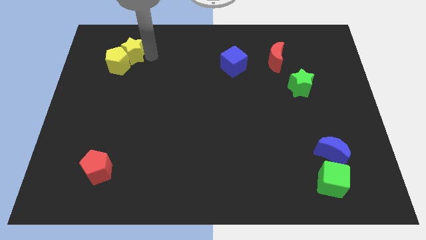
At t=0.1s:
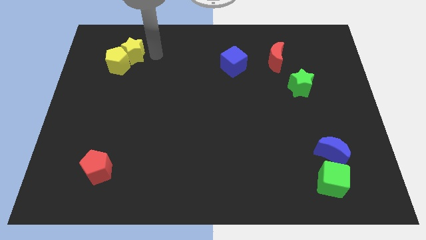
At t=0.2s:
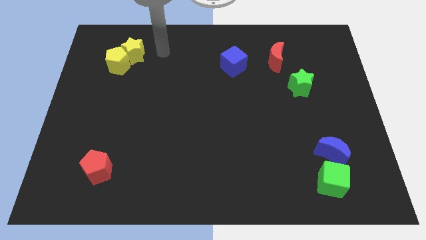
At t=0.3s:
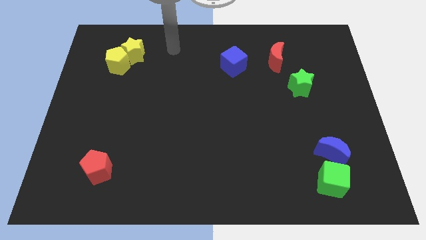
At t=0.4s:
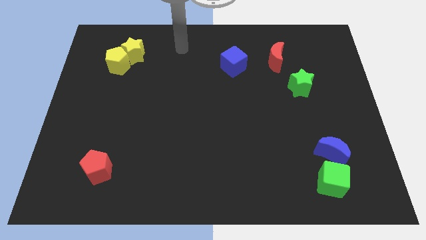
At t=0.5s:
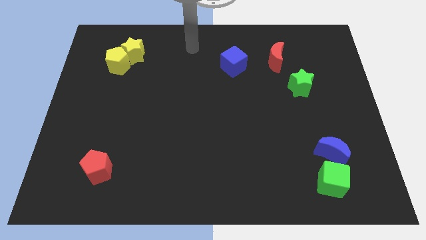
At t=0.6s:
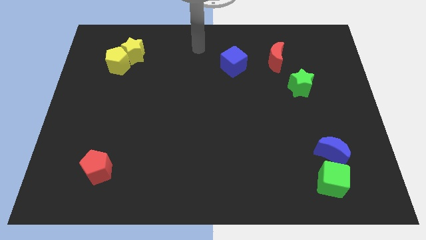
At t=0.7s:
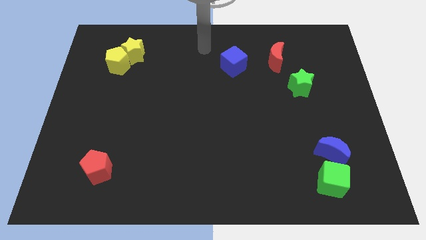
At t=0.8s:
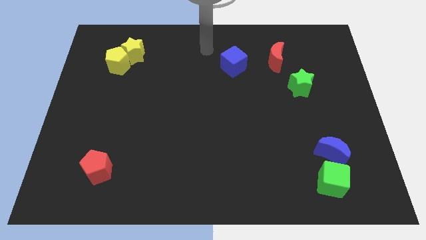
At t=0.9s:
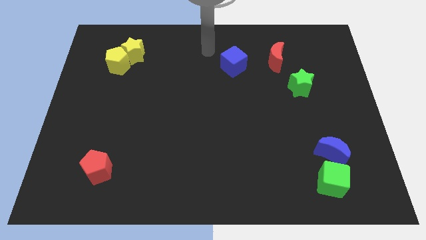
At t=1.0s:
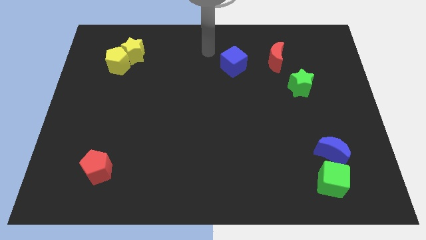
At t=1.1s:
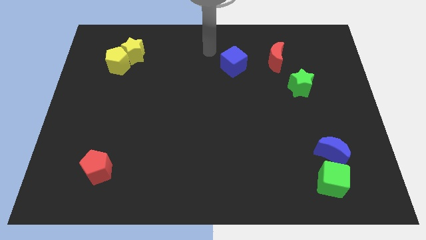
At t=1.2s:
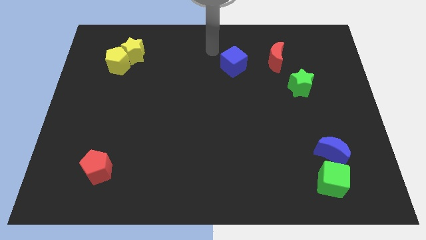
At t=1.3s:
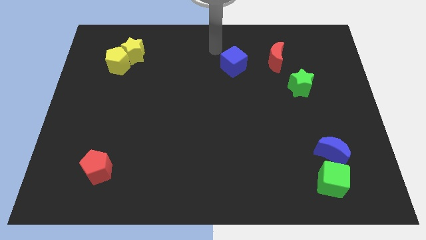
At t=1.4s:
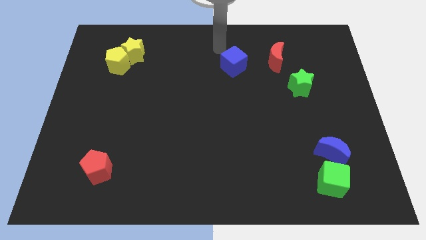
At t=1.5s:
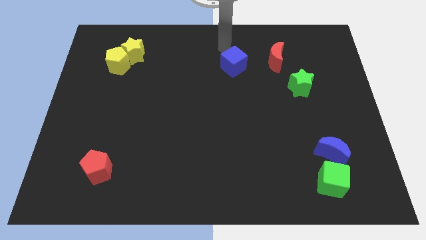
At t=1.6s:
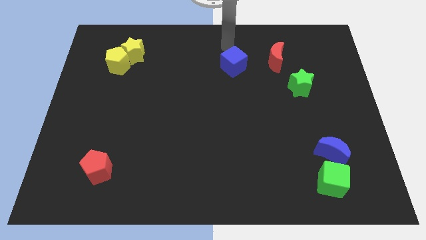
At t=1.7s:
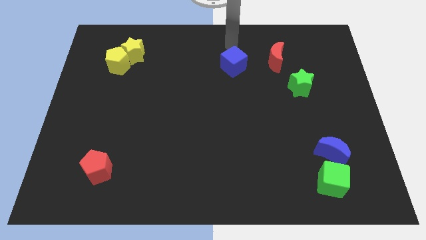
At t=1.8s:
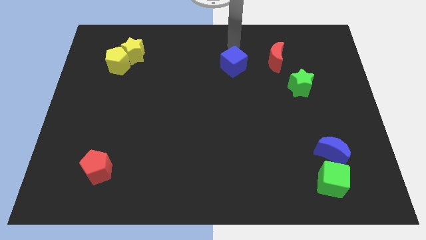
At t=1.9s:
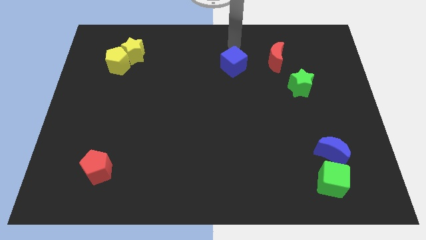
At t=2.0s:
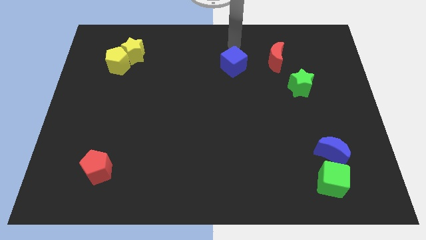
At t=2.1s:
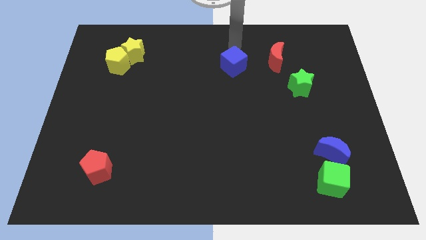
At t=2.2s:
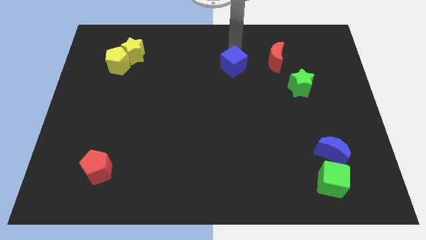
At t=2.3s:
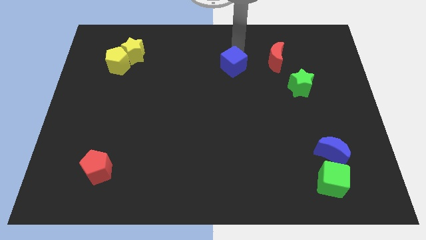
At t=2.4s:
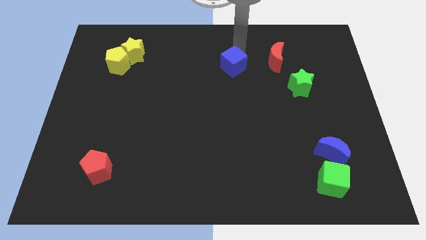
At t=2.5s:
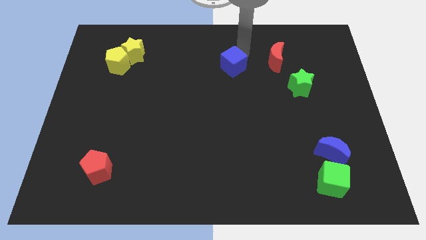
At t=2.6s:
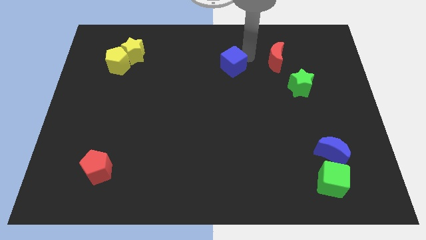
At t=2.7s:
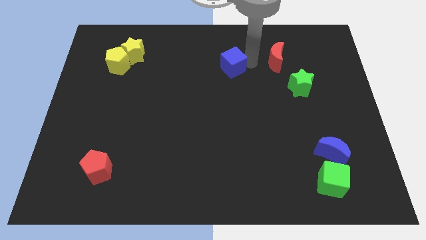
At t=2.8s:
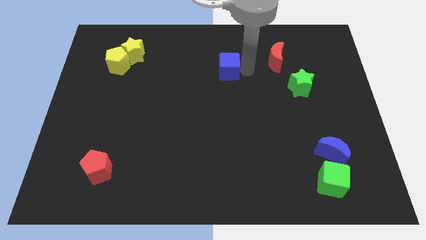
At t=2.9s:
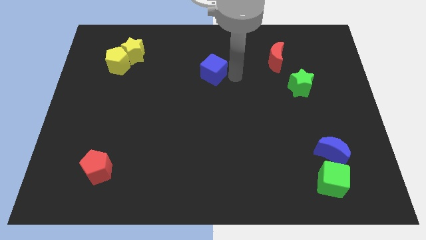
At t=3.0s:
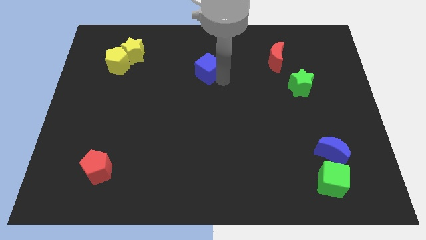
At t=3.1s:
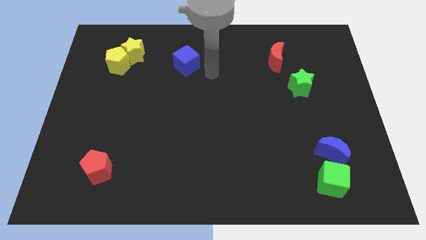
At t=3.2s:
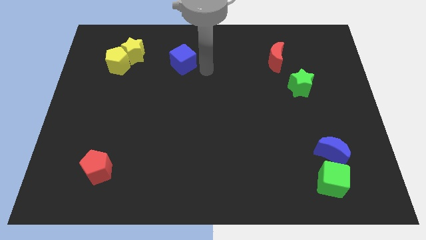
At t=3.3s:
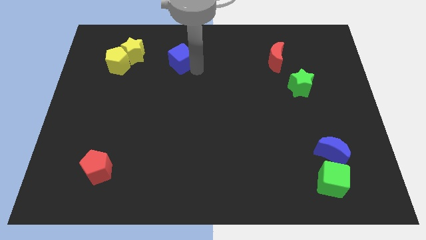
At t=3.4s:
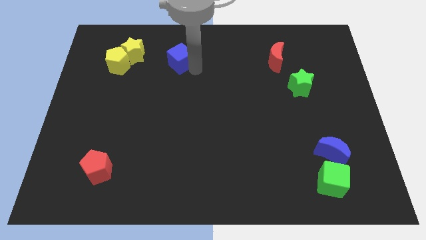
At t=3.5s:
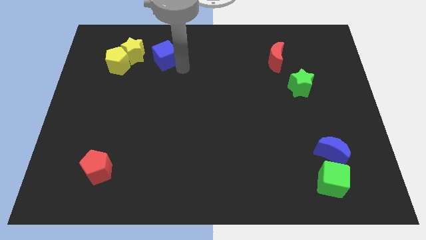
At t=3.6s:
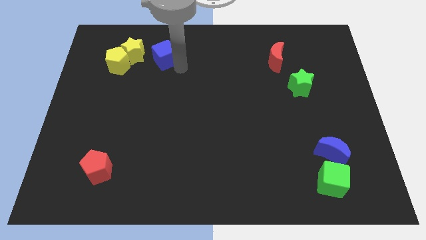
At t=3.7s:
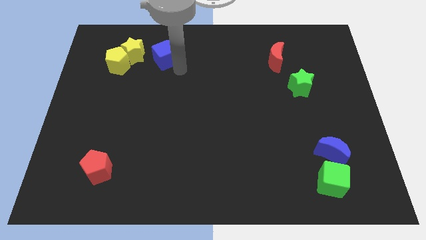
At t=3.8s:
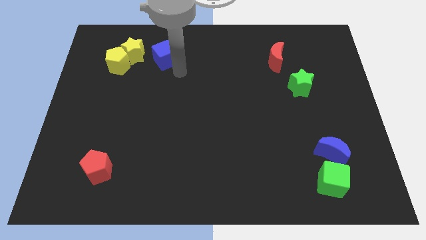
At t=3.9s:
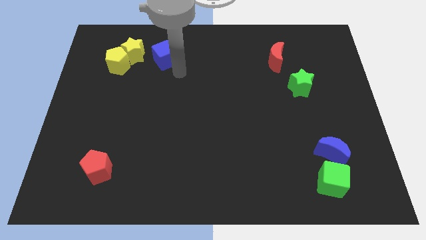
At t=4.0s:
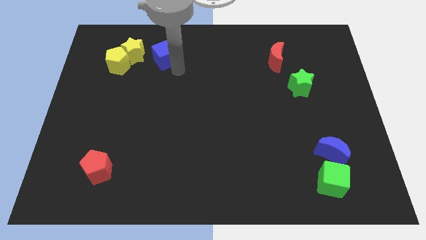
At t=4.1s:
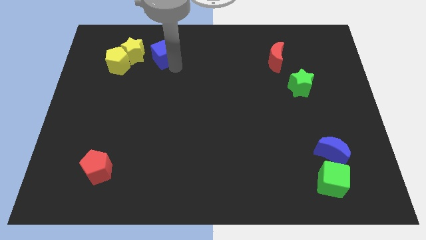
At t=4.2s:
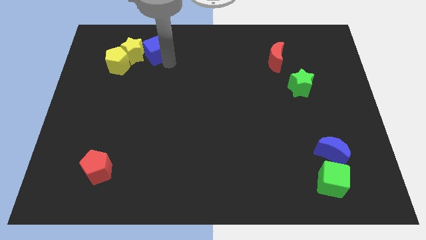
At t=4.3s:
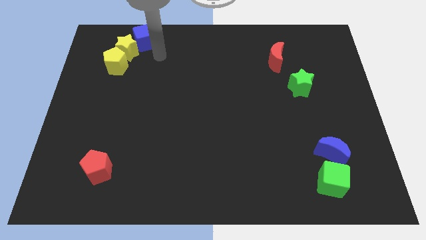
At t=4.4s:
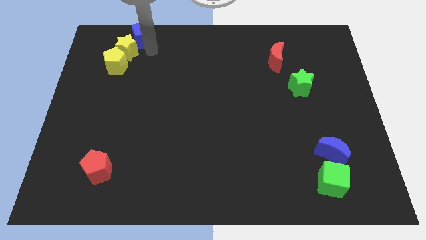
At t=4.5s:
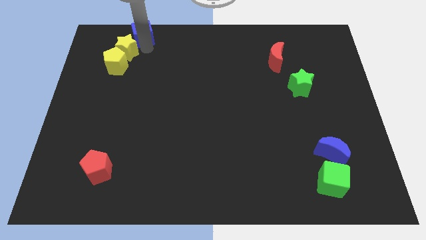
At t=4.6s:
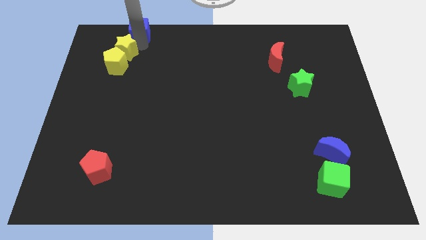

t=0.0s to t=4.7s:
move the blue cube towards the top side of the yellow star

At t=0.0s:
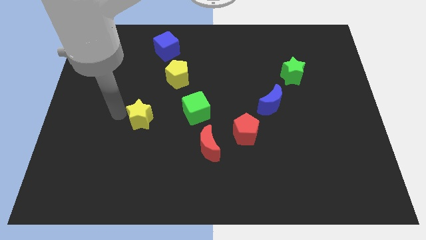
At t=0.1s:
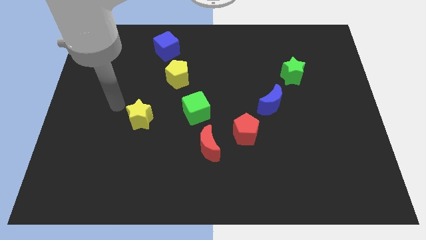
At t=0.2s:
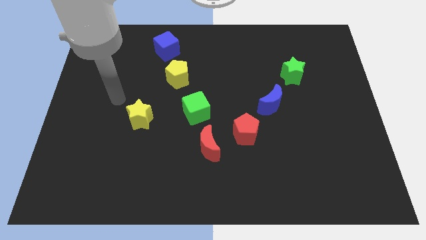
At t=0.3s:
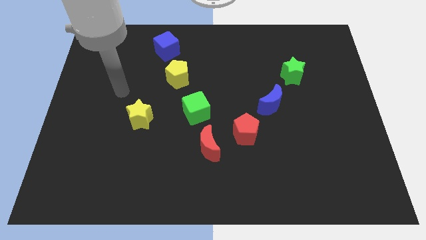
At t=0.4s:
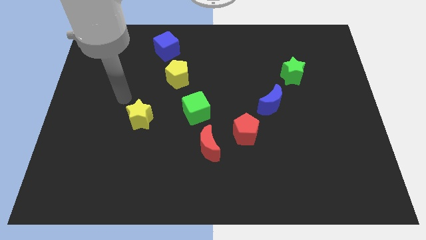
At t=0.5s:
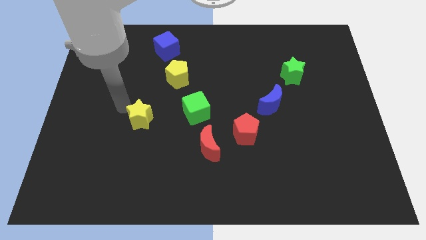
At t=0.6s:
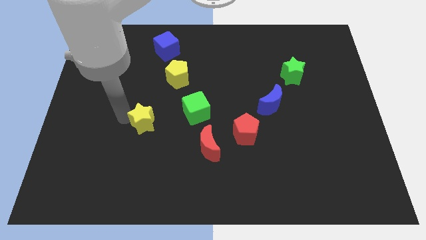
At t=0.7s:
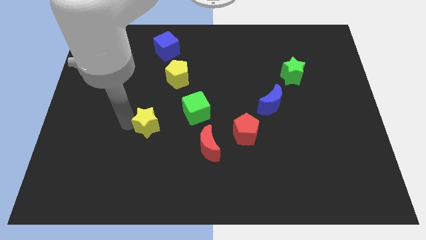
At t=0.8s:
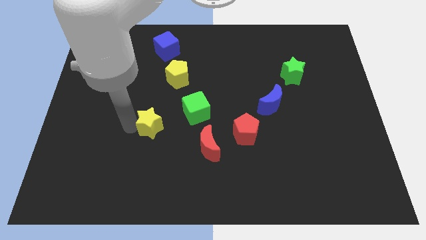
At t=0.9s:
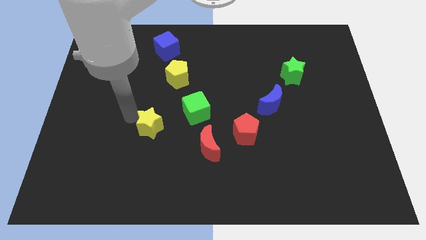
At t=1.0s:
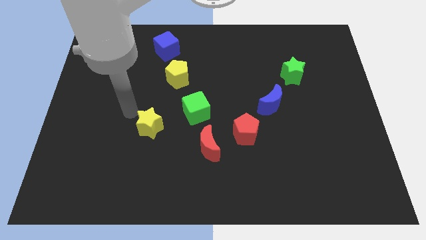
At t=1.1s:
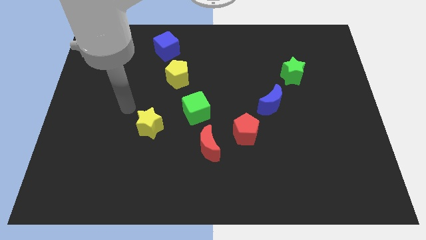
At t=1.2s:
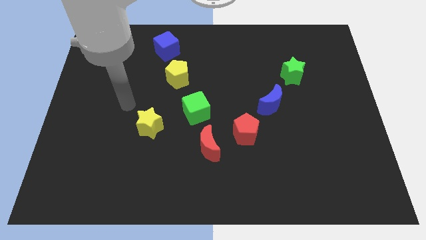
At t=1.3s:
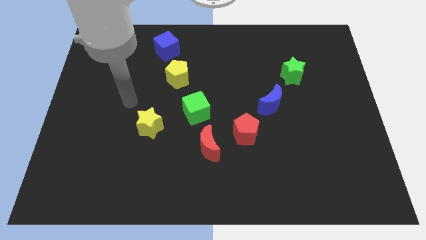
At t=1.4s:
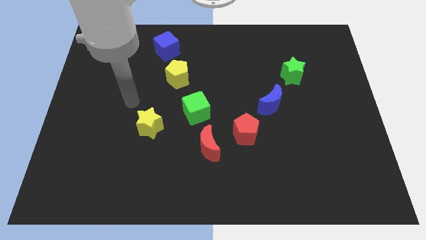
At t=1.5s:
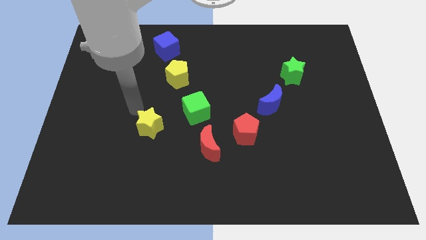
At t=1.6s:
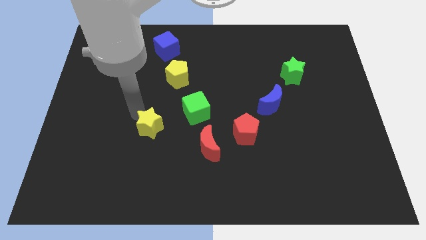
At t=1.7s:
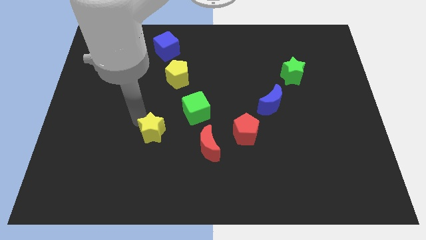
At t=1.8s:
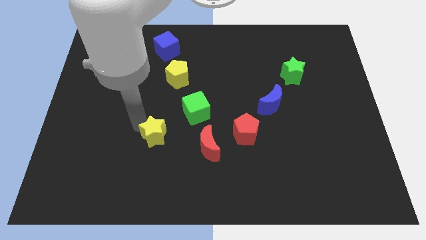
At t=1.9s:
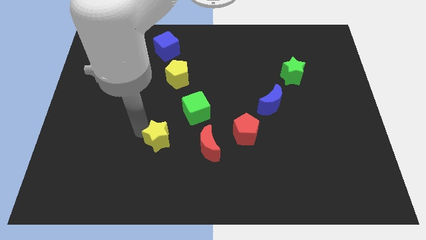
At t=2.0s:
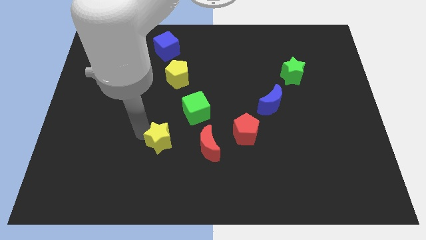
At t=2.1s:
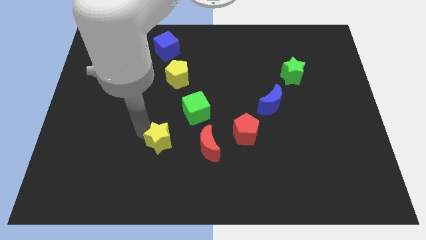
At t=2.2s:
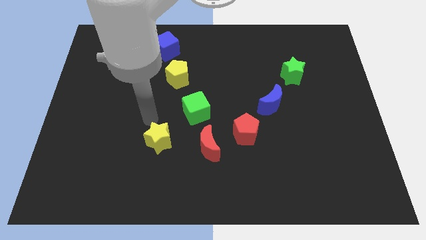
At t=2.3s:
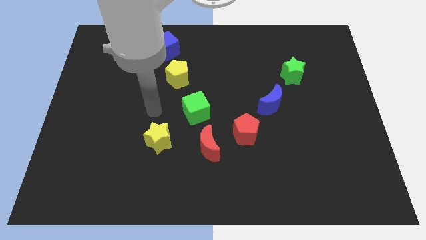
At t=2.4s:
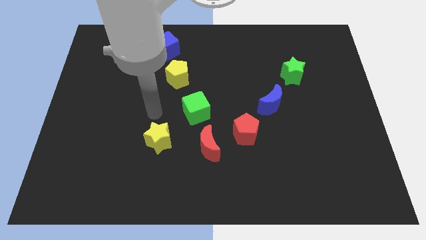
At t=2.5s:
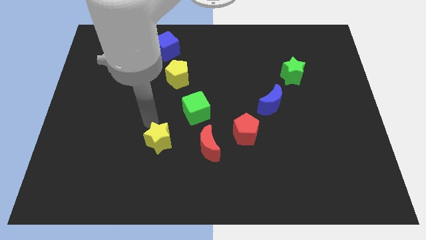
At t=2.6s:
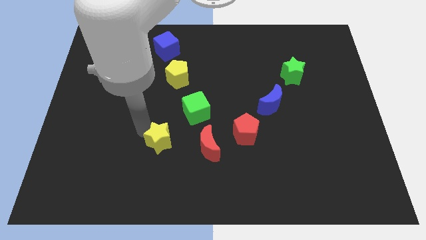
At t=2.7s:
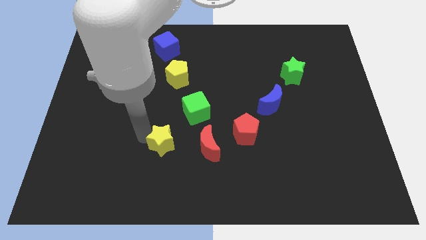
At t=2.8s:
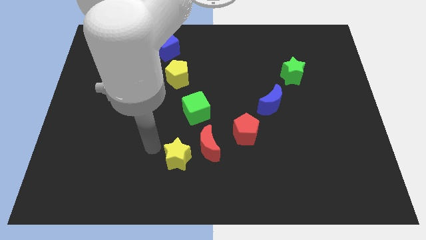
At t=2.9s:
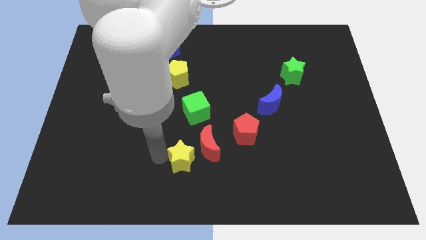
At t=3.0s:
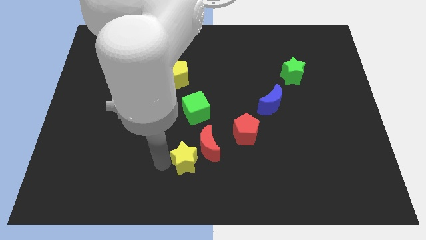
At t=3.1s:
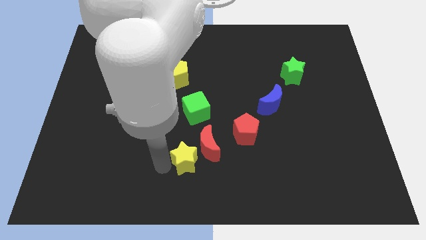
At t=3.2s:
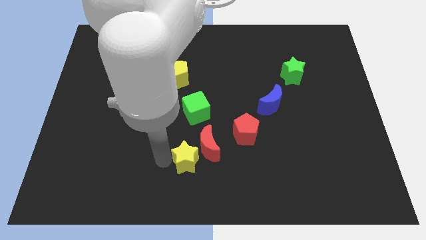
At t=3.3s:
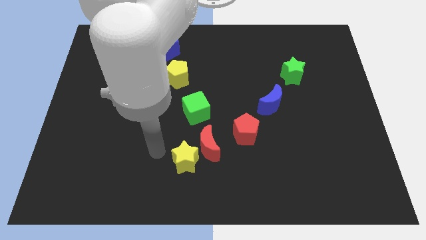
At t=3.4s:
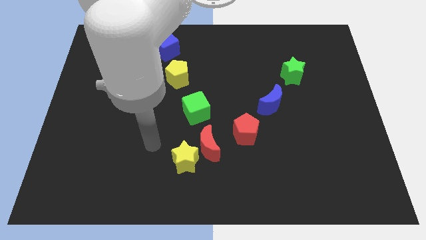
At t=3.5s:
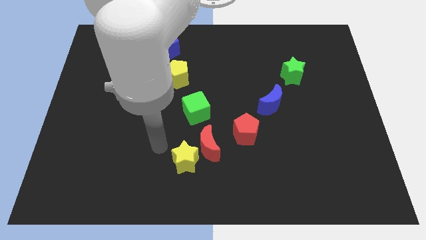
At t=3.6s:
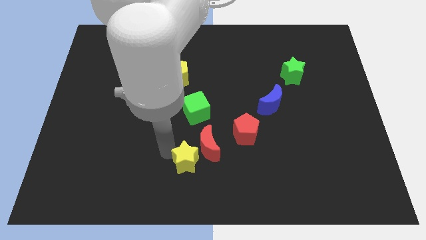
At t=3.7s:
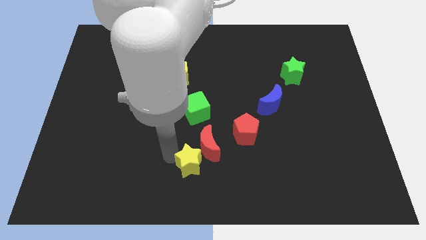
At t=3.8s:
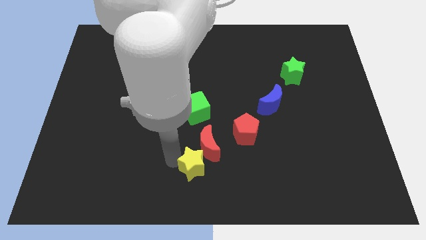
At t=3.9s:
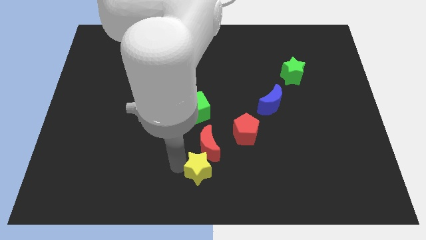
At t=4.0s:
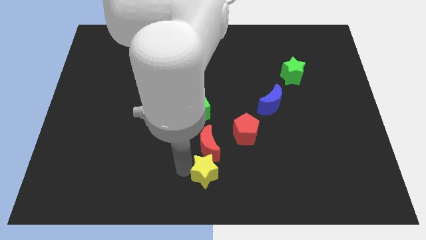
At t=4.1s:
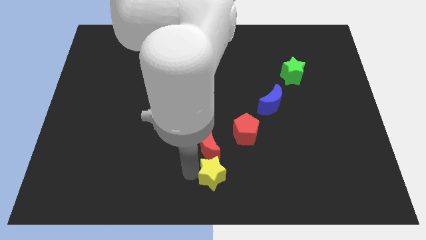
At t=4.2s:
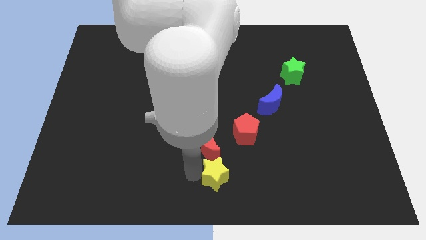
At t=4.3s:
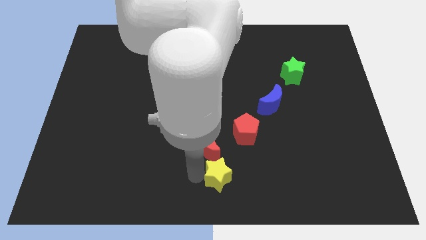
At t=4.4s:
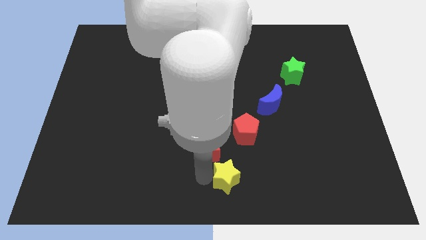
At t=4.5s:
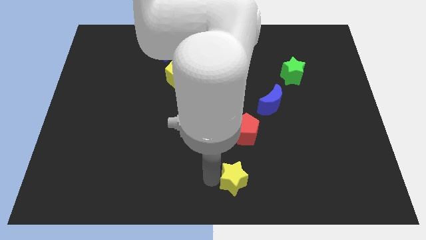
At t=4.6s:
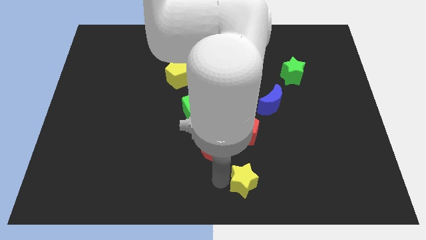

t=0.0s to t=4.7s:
push the yellow star towards the bottom center of the board
